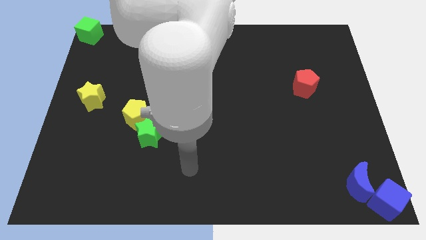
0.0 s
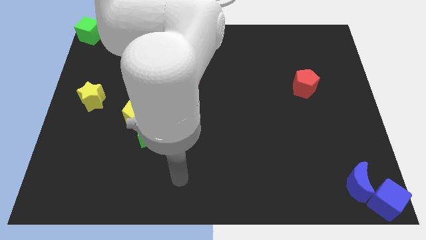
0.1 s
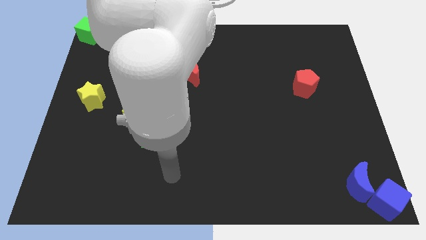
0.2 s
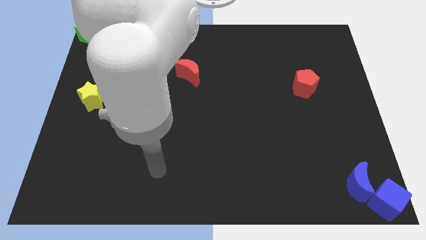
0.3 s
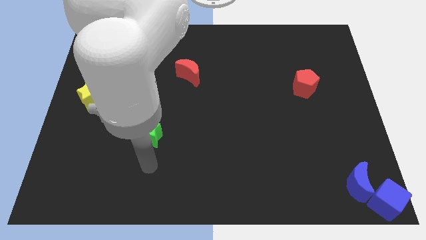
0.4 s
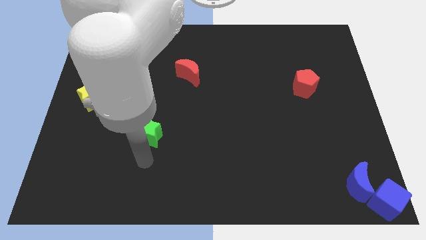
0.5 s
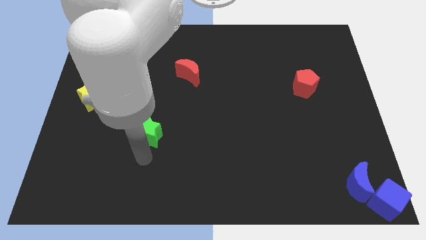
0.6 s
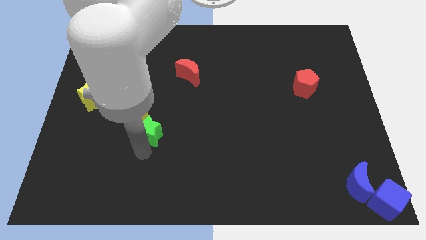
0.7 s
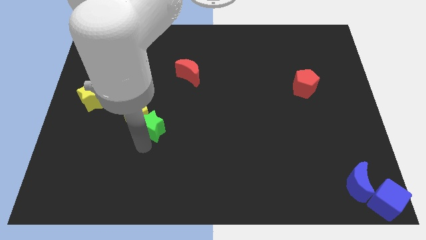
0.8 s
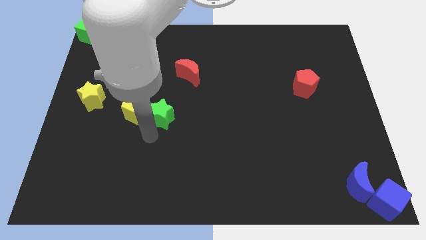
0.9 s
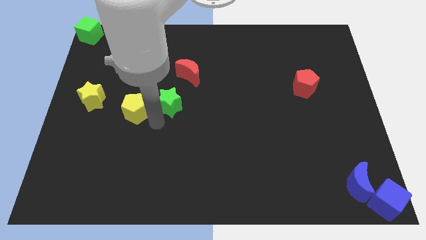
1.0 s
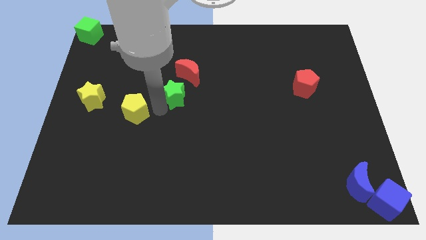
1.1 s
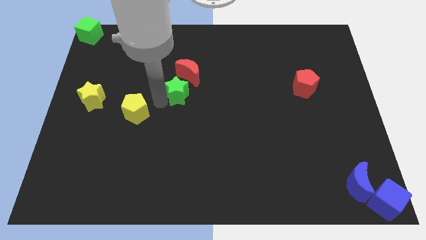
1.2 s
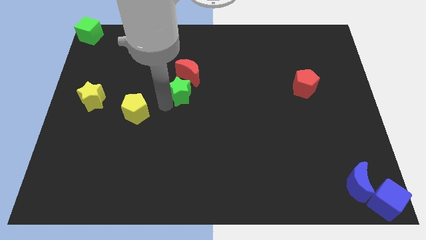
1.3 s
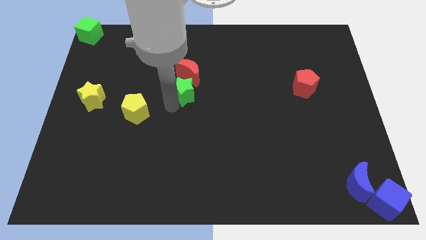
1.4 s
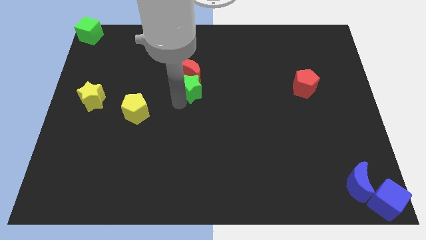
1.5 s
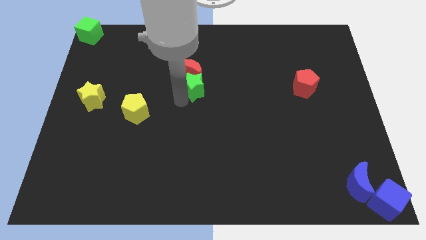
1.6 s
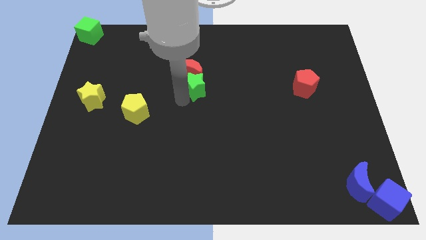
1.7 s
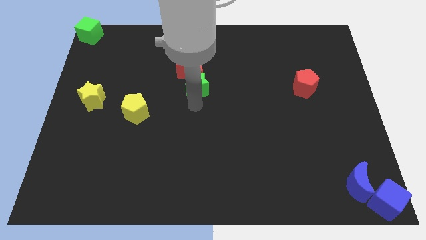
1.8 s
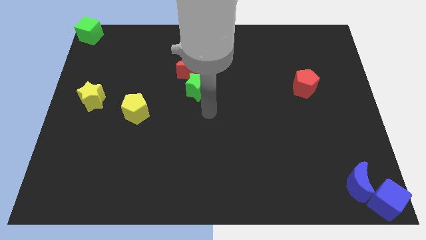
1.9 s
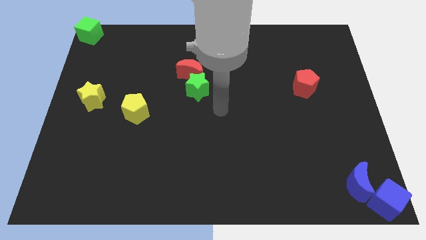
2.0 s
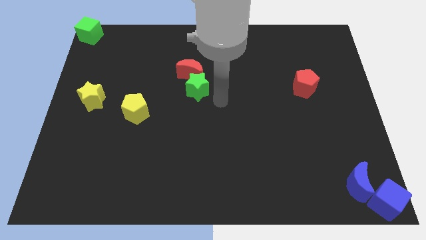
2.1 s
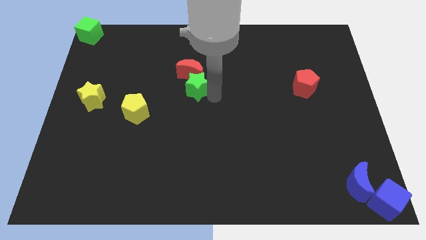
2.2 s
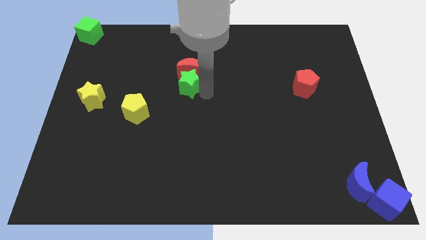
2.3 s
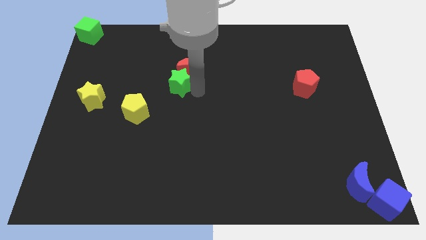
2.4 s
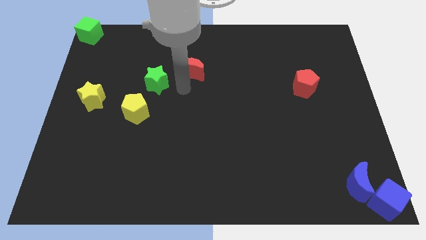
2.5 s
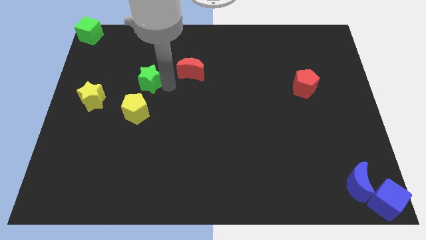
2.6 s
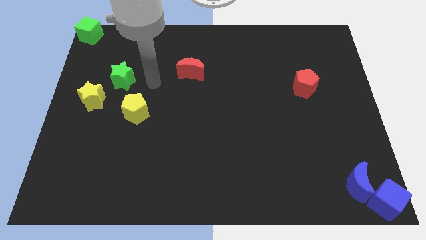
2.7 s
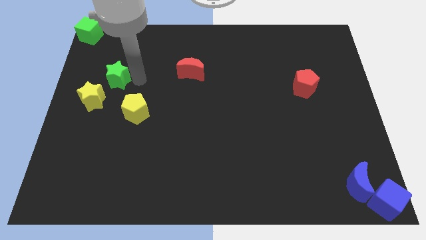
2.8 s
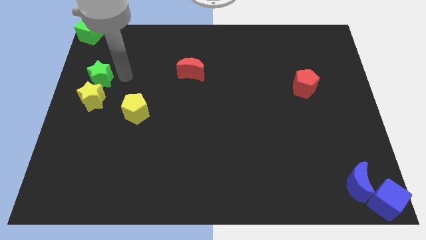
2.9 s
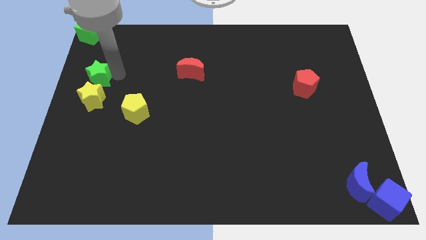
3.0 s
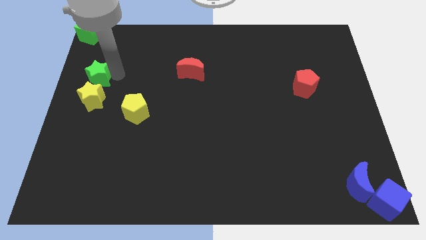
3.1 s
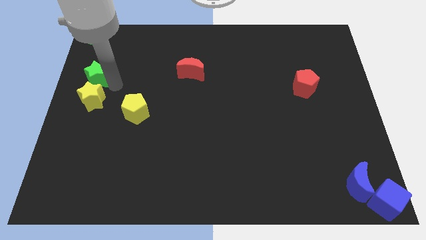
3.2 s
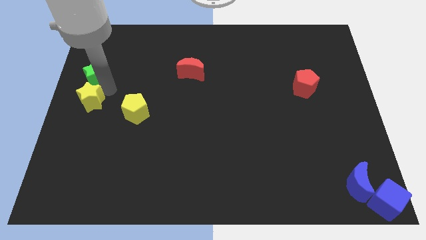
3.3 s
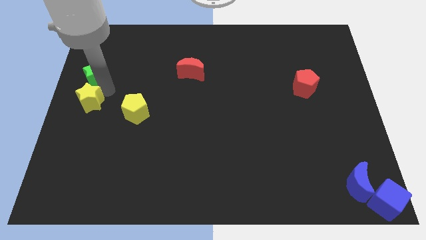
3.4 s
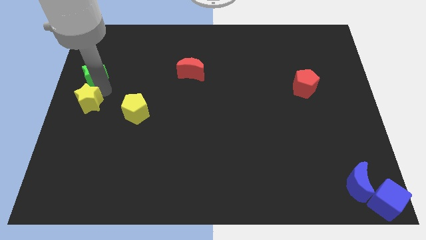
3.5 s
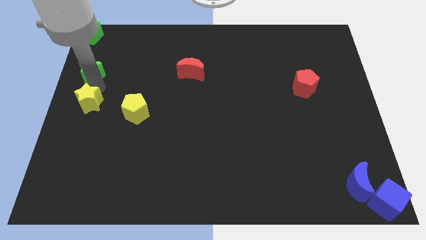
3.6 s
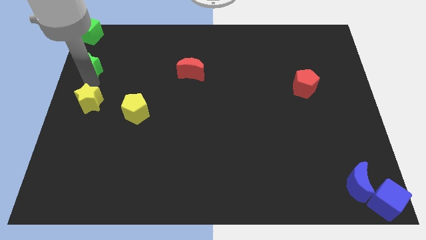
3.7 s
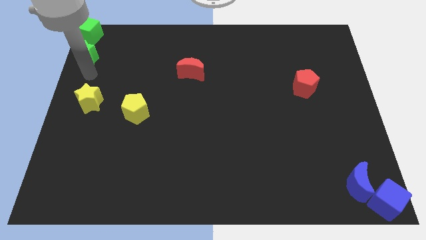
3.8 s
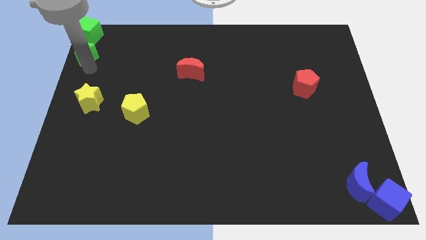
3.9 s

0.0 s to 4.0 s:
separate green star from yellow pentagon

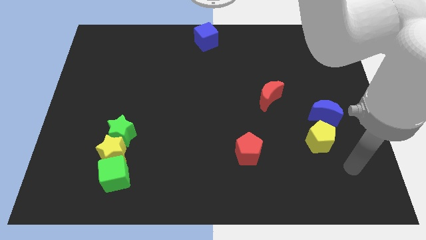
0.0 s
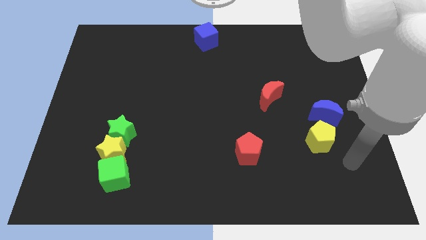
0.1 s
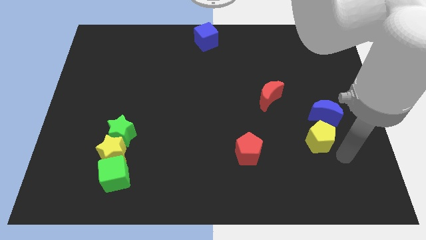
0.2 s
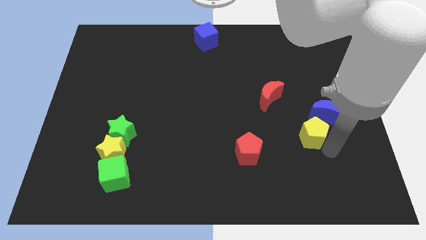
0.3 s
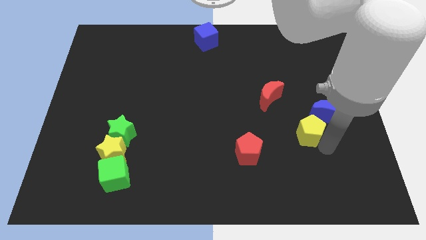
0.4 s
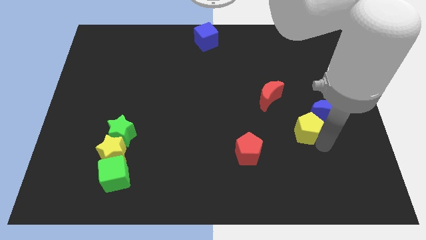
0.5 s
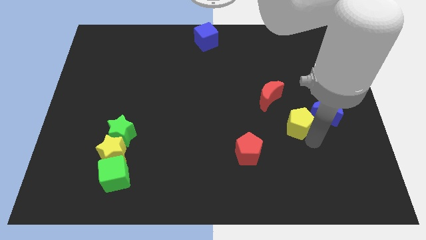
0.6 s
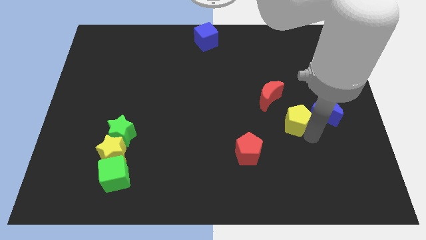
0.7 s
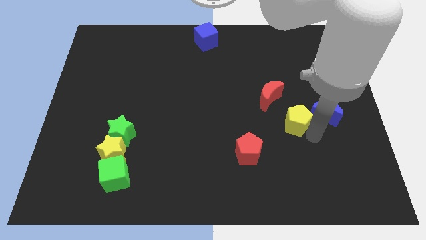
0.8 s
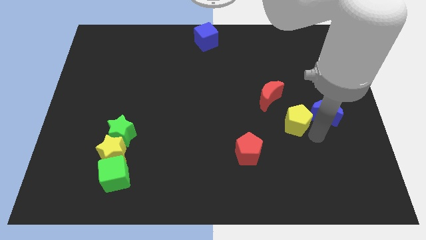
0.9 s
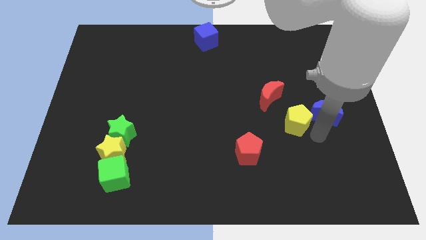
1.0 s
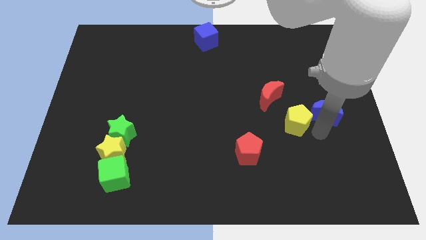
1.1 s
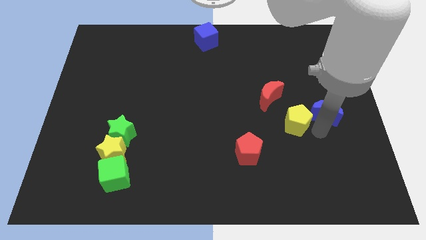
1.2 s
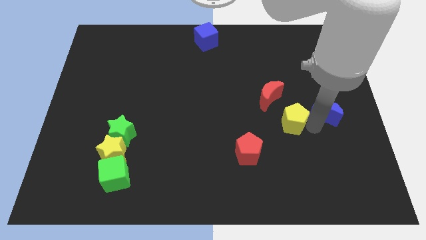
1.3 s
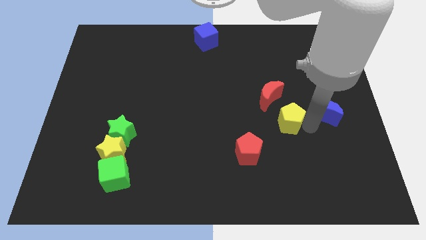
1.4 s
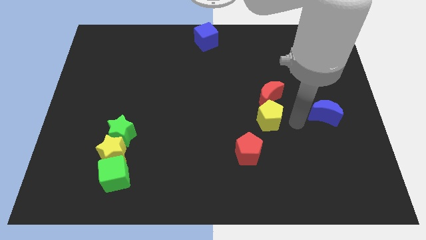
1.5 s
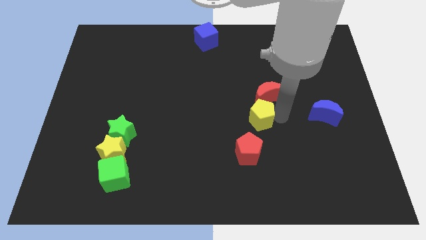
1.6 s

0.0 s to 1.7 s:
push the yellow pentagon into the red crescent

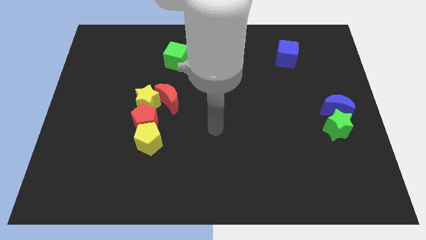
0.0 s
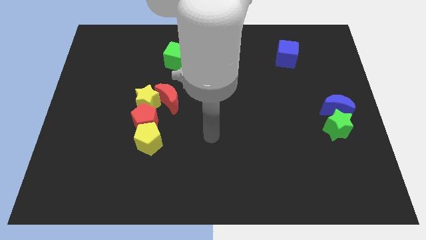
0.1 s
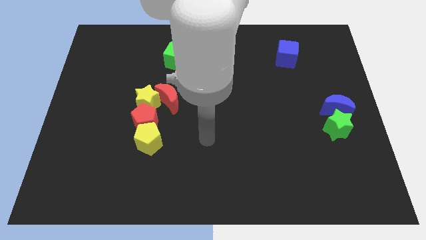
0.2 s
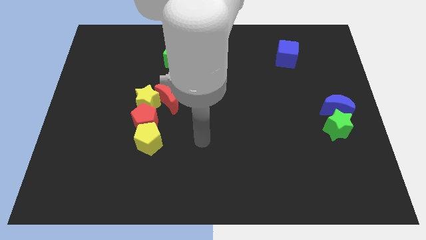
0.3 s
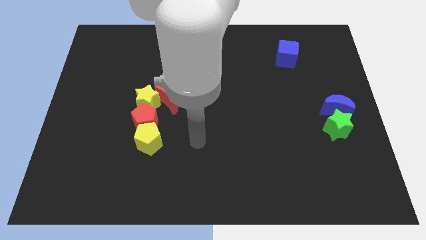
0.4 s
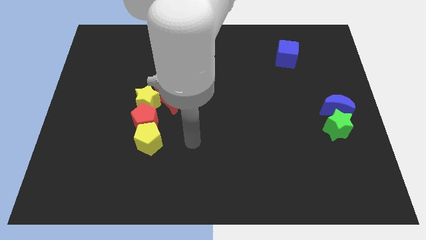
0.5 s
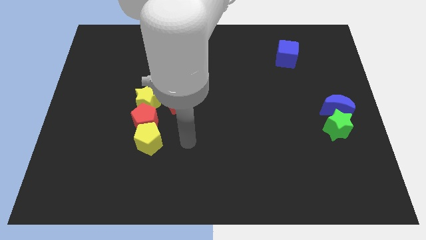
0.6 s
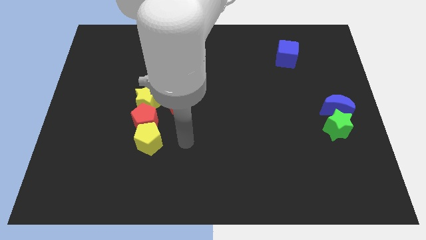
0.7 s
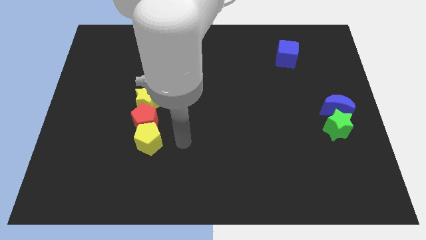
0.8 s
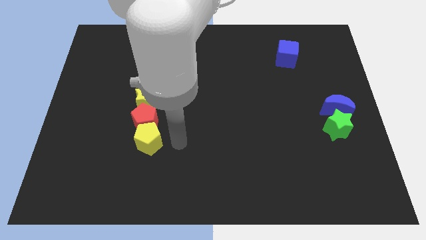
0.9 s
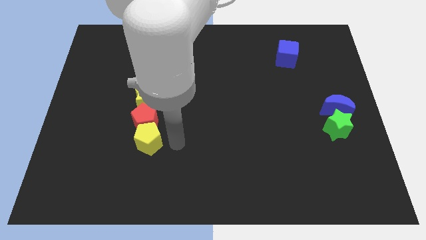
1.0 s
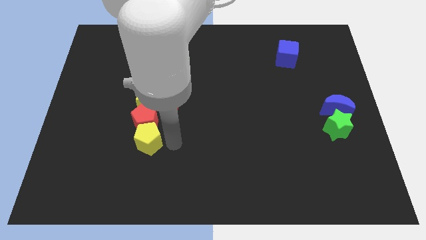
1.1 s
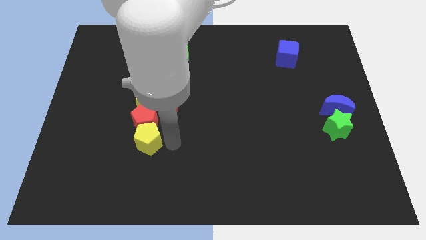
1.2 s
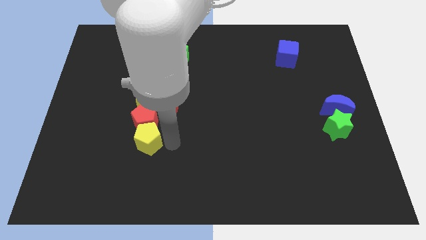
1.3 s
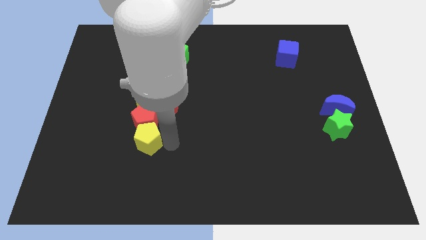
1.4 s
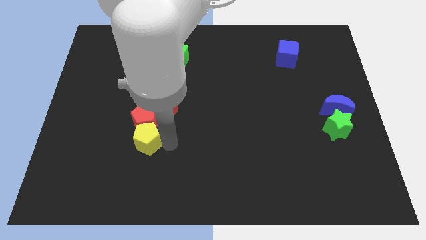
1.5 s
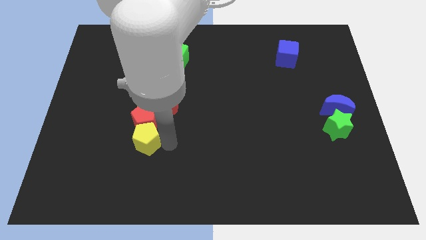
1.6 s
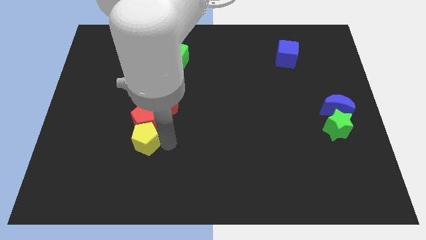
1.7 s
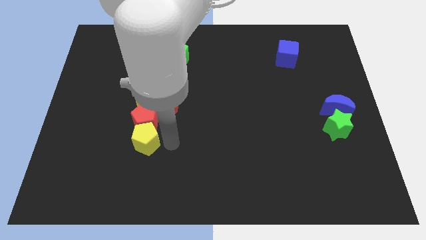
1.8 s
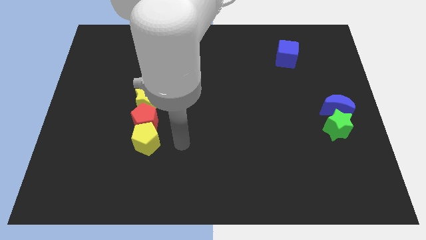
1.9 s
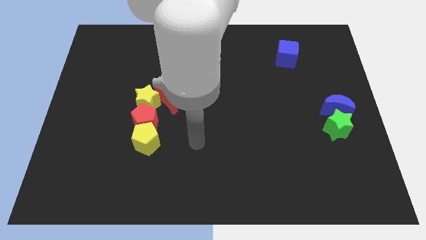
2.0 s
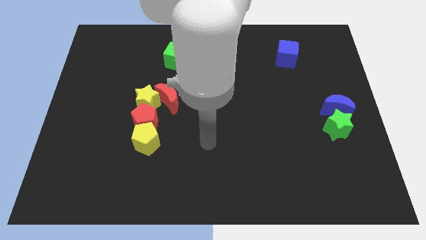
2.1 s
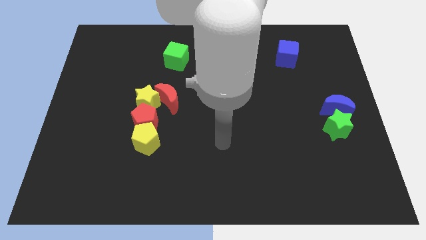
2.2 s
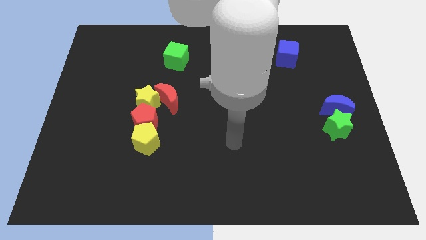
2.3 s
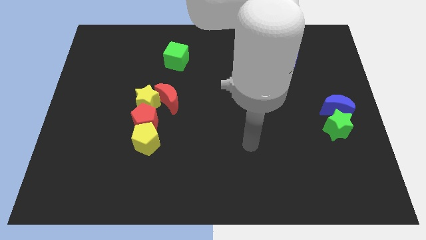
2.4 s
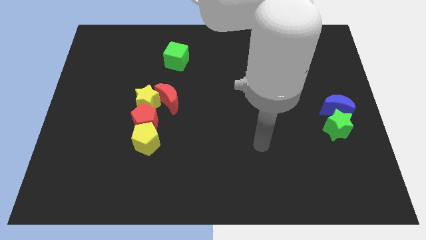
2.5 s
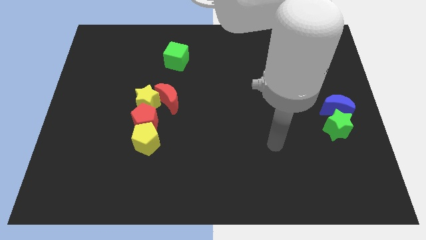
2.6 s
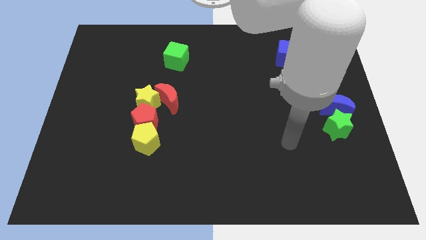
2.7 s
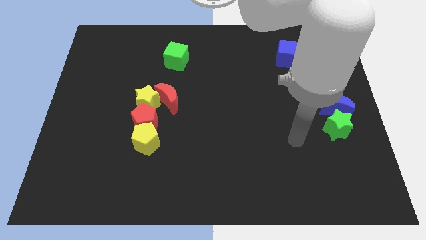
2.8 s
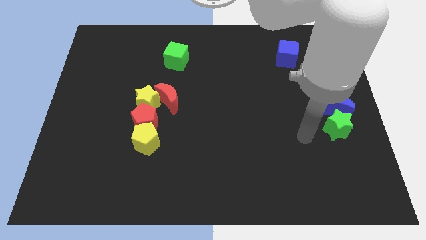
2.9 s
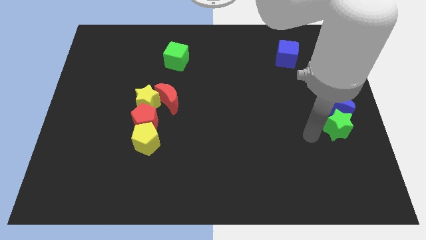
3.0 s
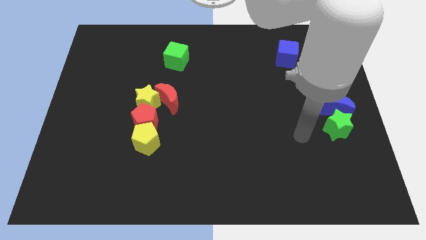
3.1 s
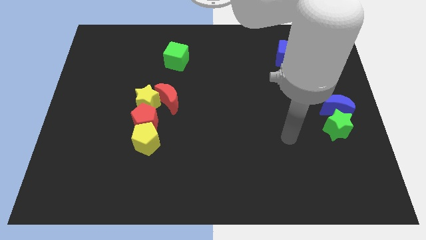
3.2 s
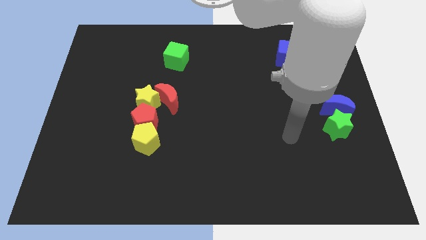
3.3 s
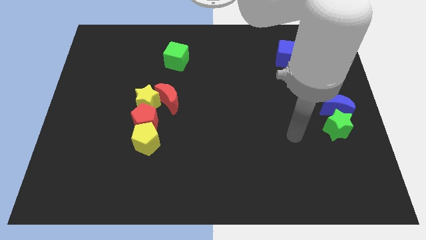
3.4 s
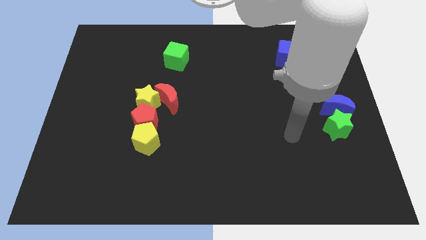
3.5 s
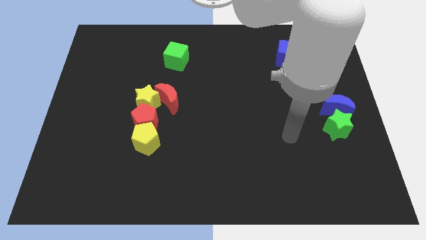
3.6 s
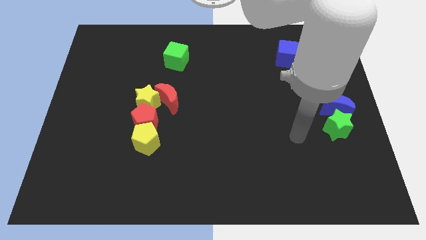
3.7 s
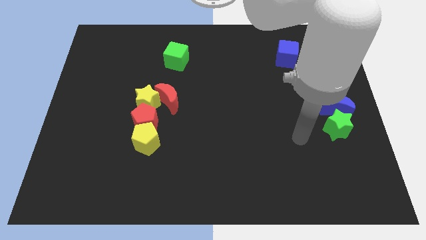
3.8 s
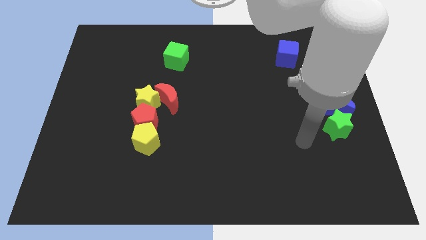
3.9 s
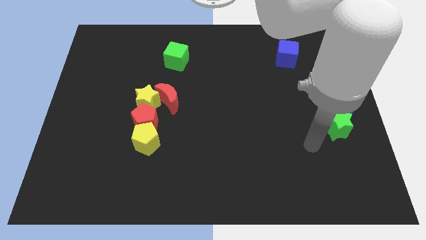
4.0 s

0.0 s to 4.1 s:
move your arm towards the green star
